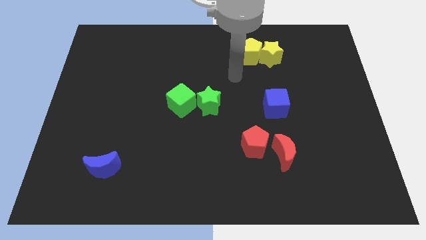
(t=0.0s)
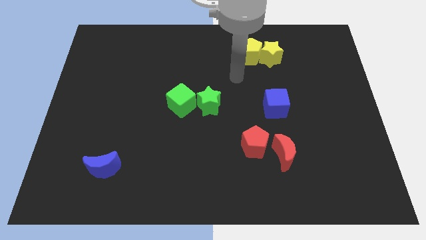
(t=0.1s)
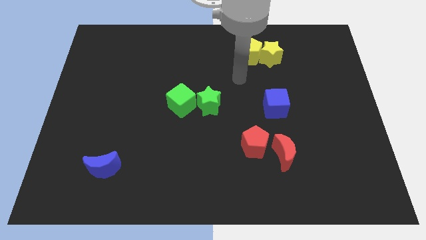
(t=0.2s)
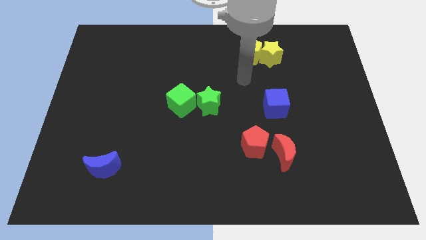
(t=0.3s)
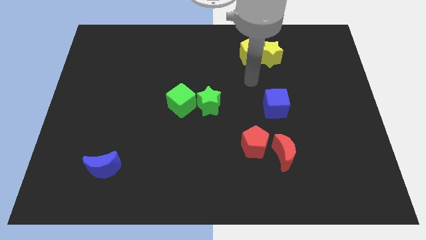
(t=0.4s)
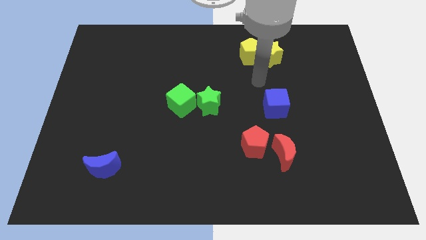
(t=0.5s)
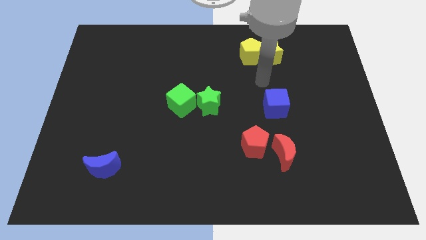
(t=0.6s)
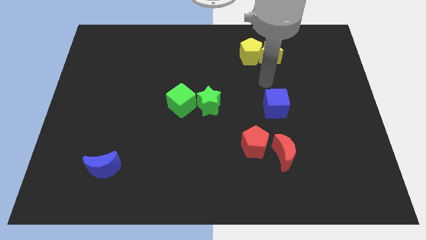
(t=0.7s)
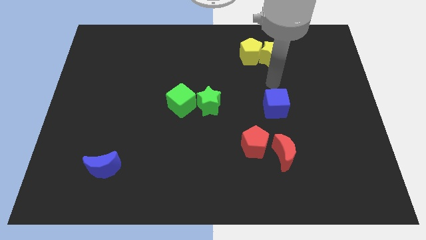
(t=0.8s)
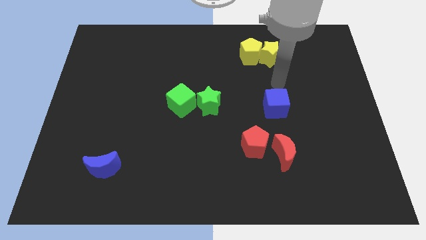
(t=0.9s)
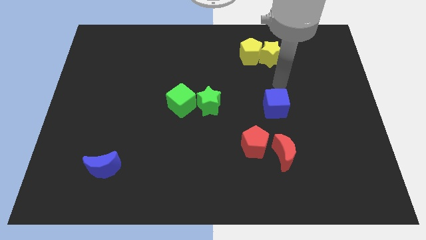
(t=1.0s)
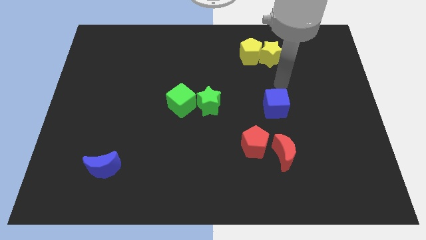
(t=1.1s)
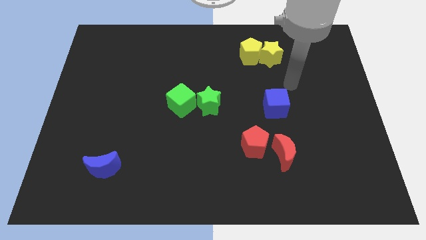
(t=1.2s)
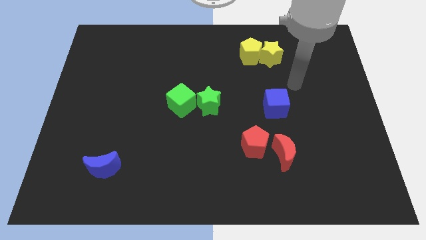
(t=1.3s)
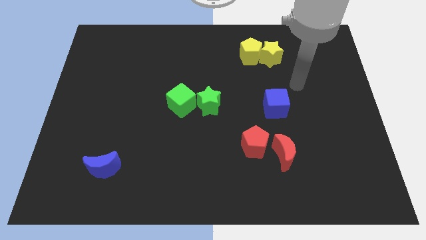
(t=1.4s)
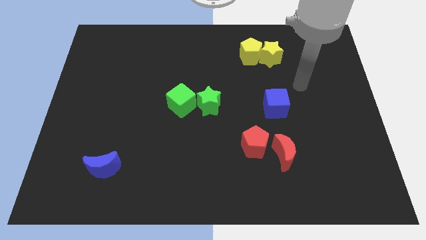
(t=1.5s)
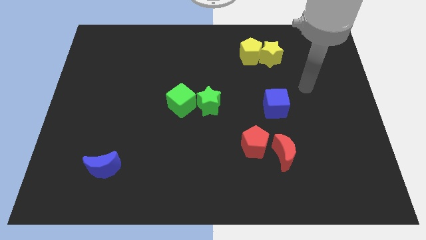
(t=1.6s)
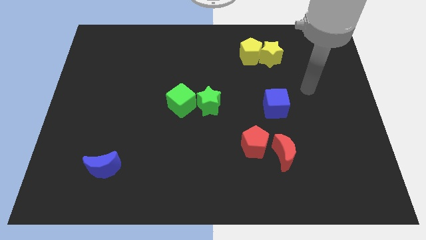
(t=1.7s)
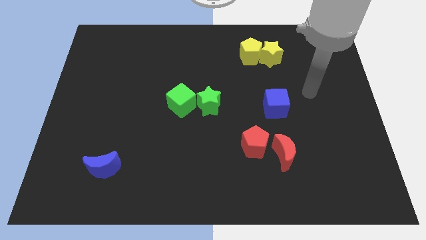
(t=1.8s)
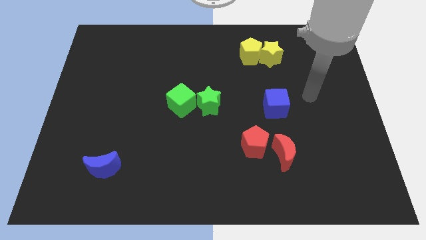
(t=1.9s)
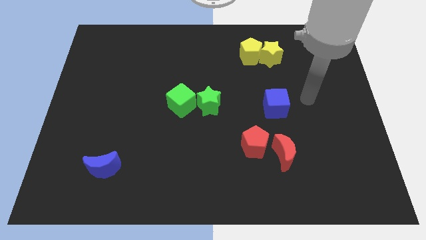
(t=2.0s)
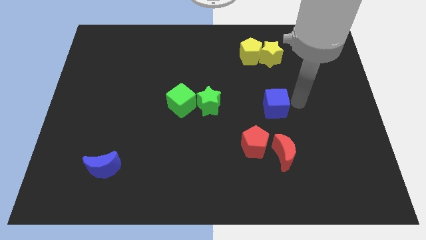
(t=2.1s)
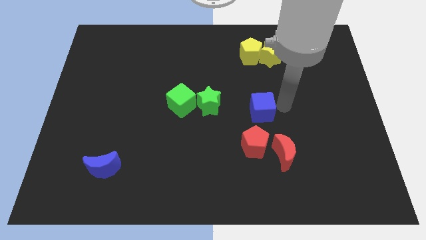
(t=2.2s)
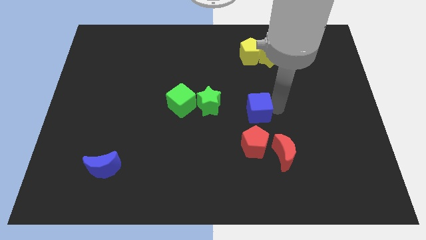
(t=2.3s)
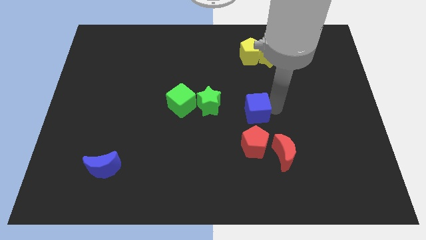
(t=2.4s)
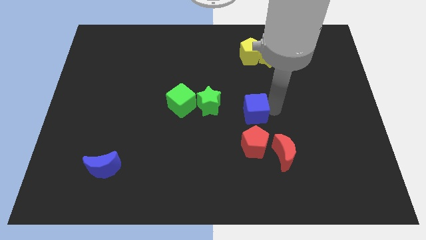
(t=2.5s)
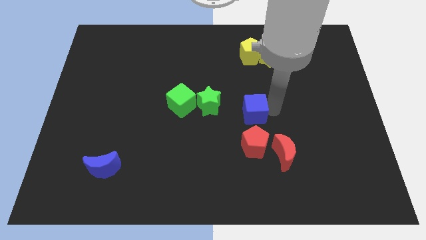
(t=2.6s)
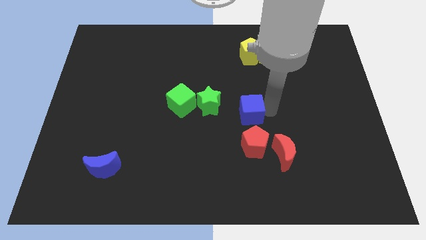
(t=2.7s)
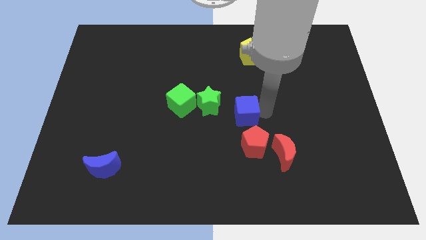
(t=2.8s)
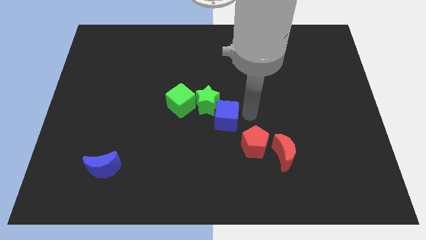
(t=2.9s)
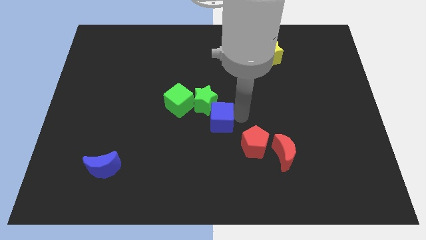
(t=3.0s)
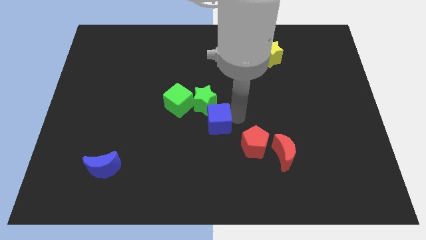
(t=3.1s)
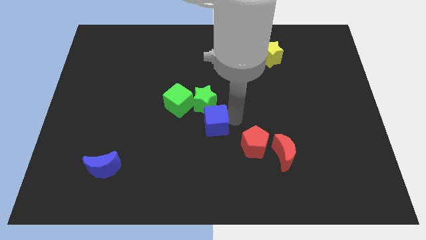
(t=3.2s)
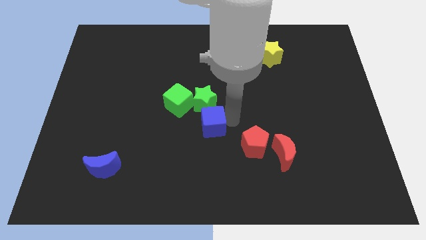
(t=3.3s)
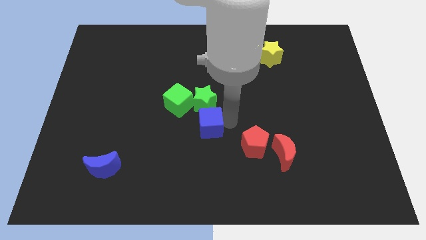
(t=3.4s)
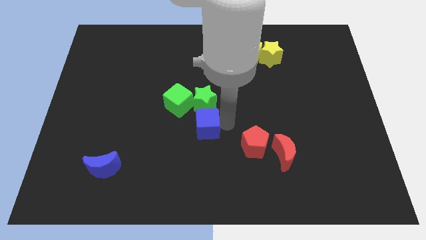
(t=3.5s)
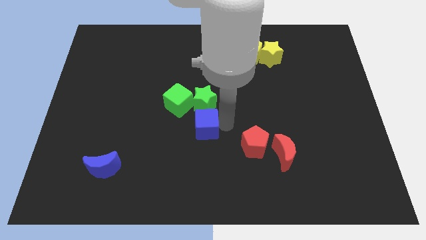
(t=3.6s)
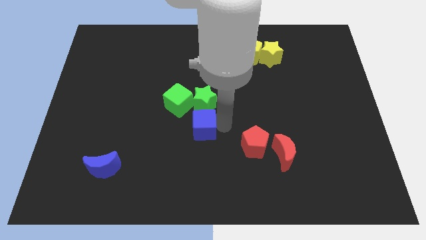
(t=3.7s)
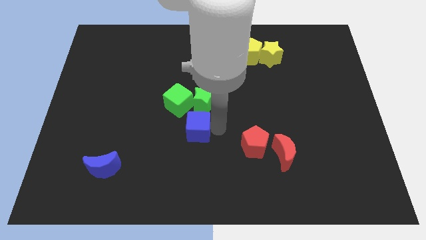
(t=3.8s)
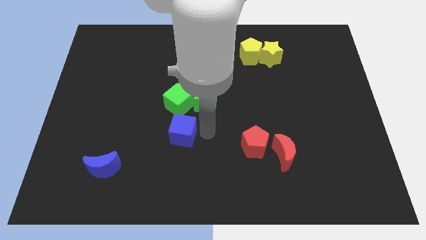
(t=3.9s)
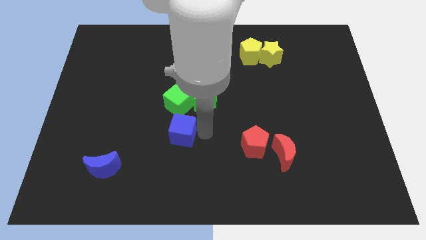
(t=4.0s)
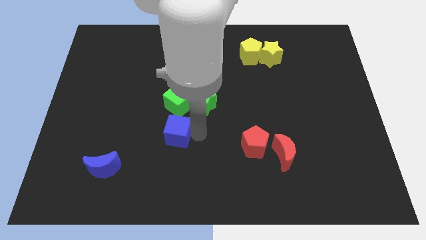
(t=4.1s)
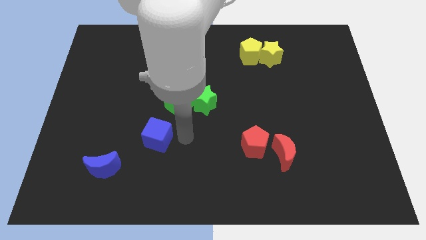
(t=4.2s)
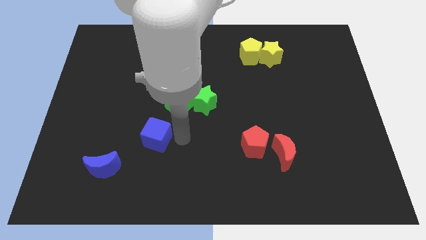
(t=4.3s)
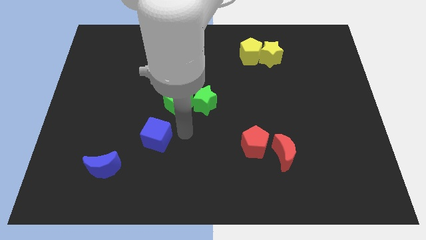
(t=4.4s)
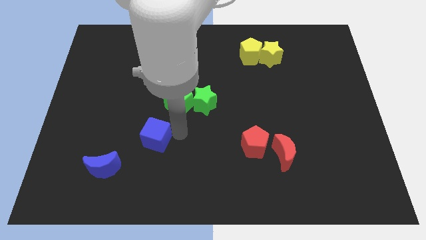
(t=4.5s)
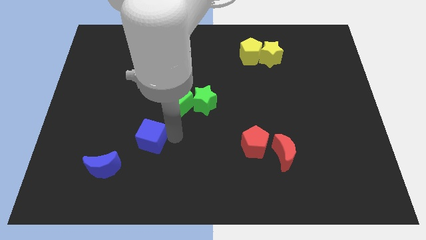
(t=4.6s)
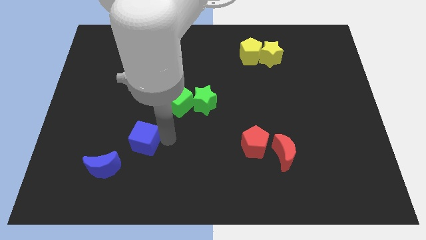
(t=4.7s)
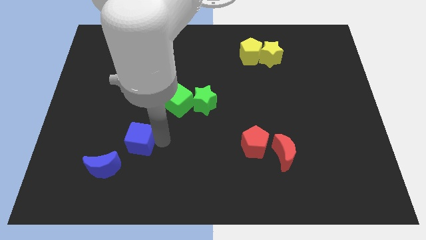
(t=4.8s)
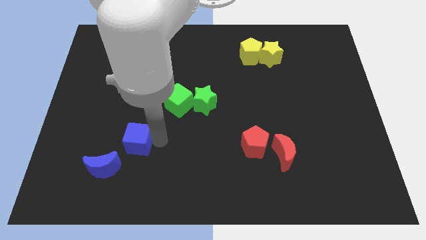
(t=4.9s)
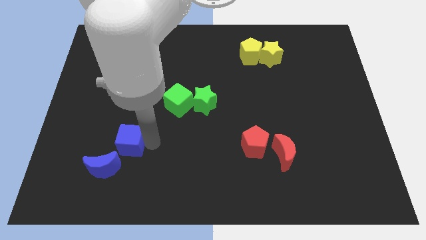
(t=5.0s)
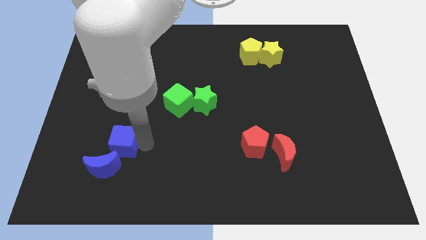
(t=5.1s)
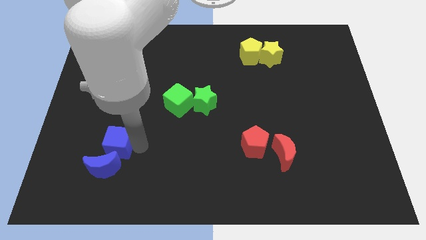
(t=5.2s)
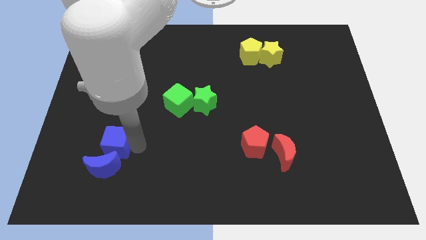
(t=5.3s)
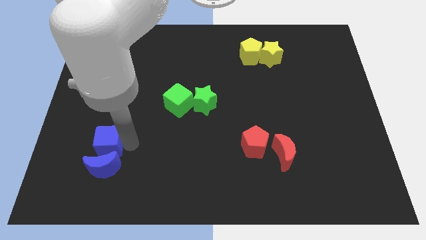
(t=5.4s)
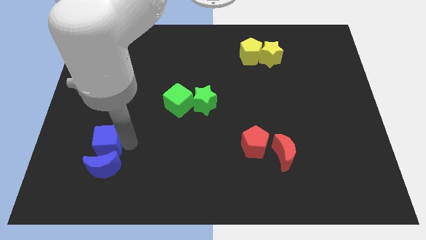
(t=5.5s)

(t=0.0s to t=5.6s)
move the blue cube to the top of the blue moon

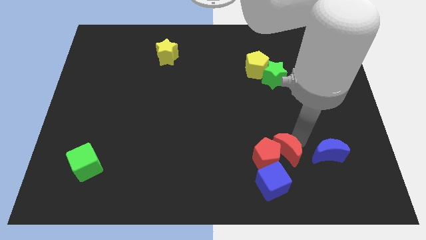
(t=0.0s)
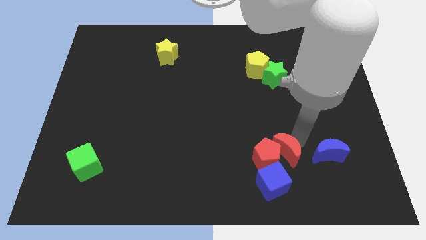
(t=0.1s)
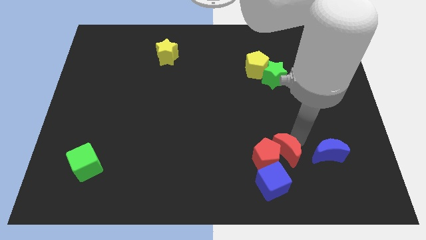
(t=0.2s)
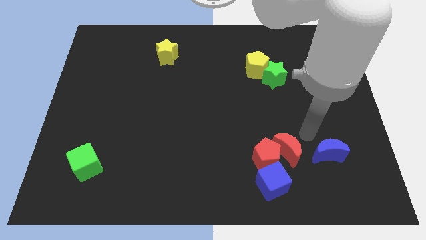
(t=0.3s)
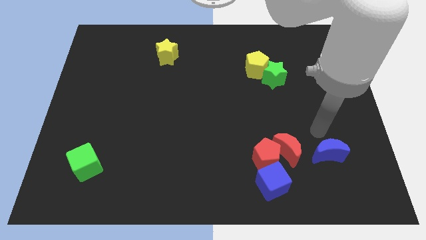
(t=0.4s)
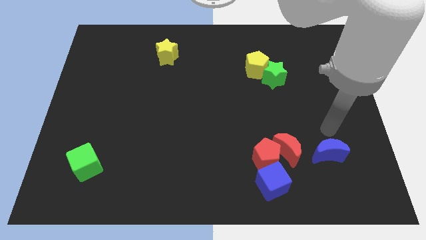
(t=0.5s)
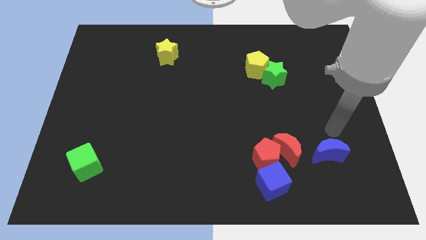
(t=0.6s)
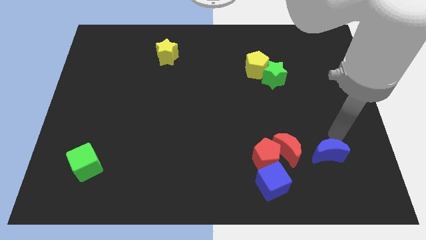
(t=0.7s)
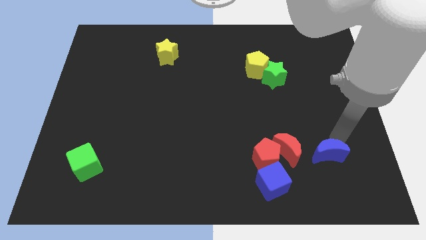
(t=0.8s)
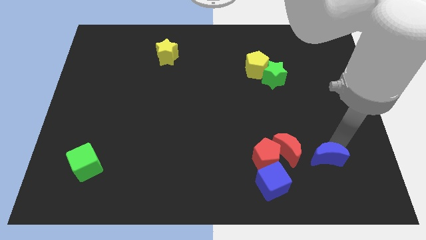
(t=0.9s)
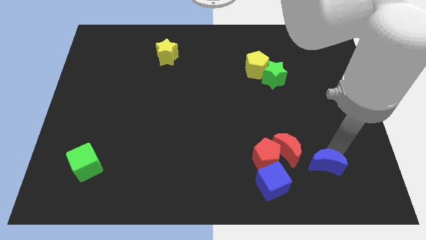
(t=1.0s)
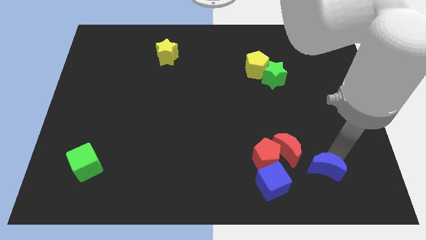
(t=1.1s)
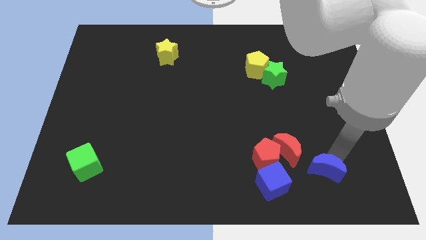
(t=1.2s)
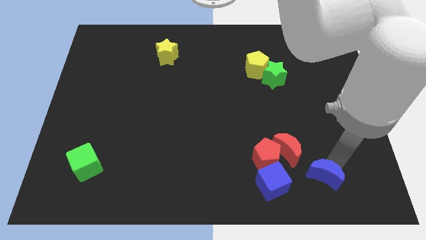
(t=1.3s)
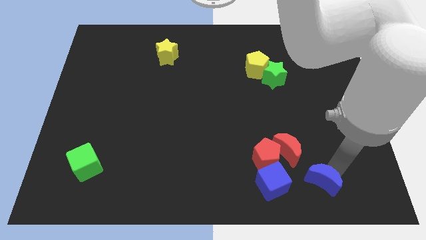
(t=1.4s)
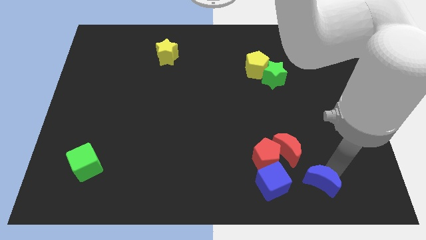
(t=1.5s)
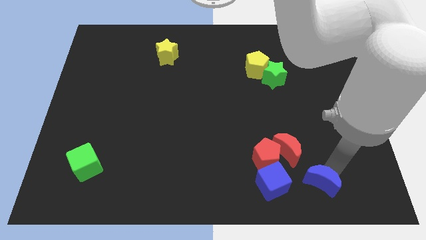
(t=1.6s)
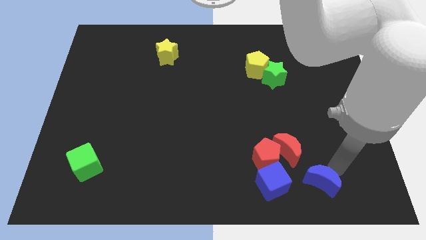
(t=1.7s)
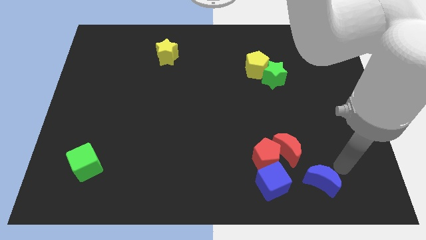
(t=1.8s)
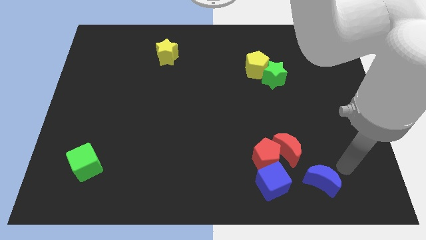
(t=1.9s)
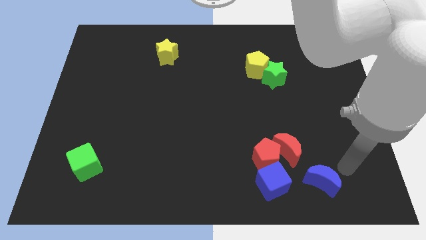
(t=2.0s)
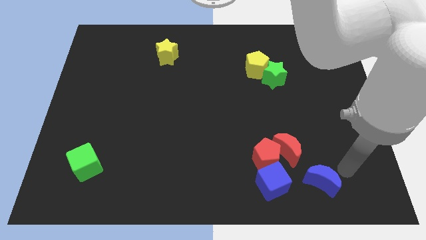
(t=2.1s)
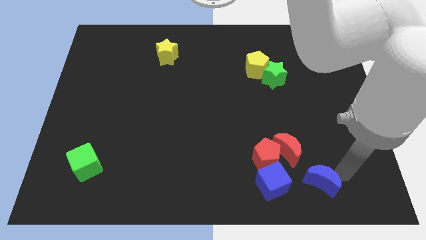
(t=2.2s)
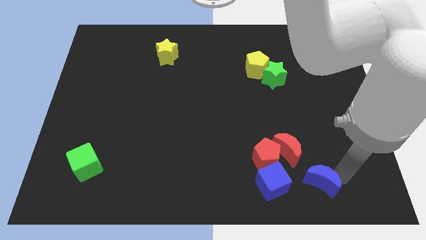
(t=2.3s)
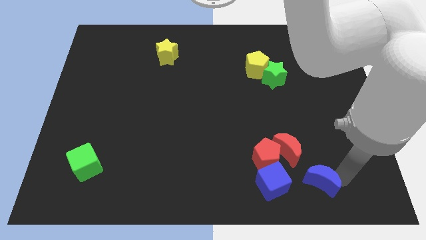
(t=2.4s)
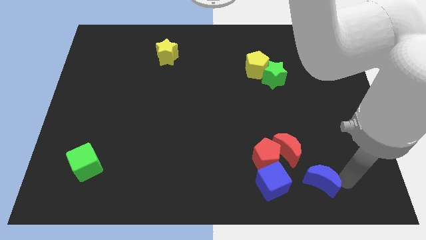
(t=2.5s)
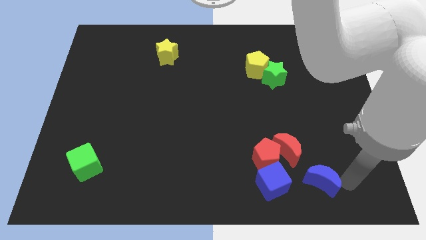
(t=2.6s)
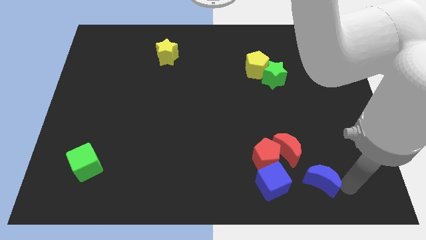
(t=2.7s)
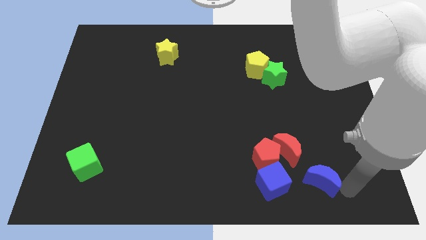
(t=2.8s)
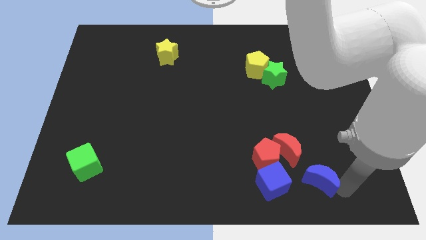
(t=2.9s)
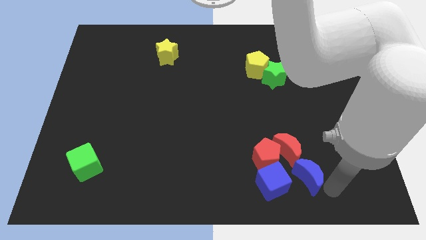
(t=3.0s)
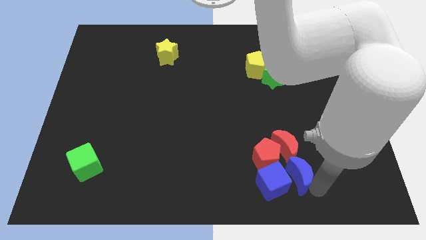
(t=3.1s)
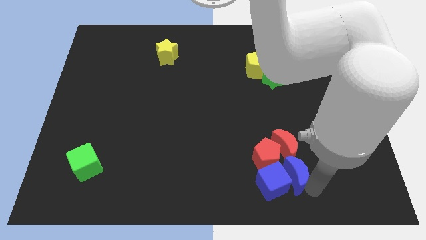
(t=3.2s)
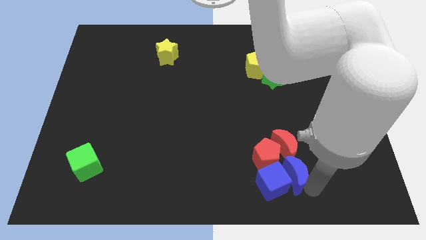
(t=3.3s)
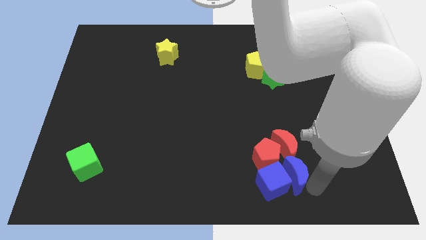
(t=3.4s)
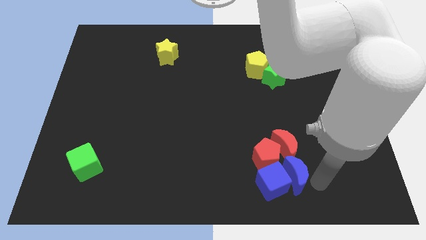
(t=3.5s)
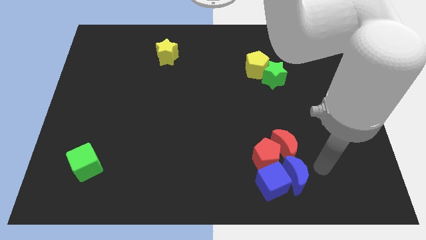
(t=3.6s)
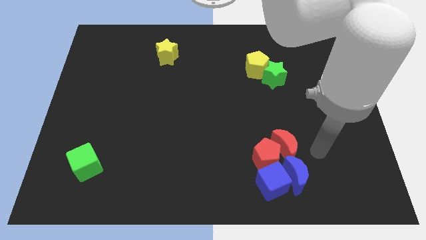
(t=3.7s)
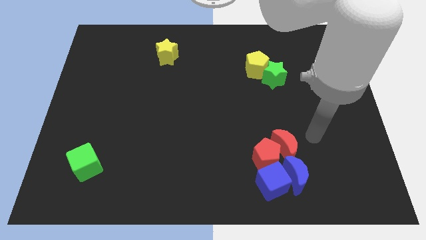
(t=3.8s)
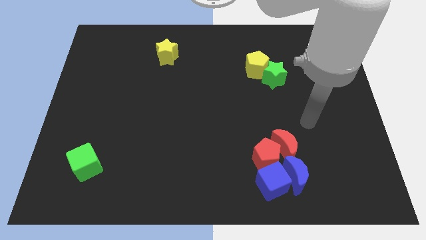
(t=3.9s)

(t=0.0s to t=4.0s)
move the blue moon to the bottom of the red crescent
